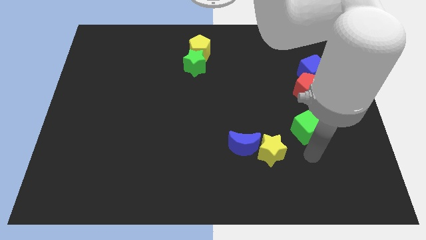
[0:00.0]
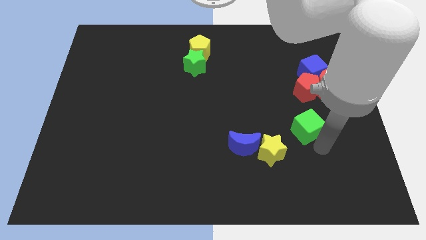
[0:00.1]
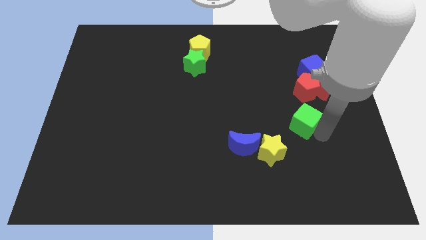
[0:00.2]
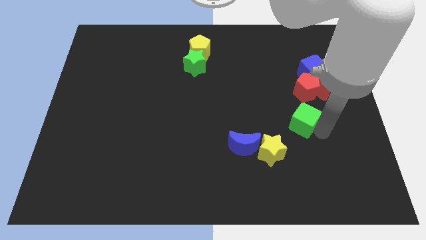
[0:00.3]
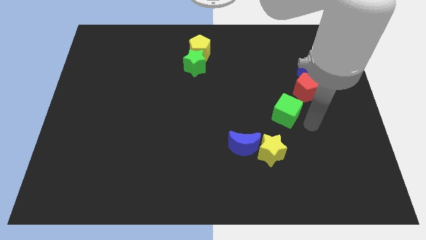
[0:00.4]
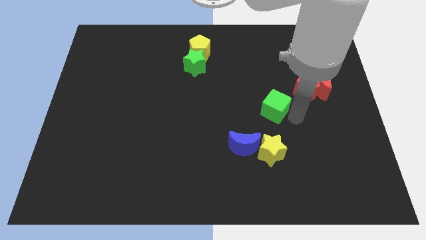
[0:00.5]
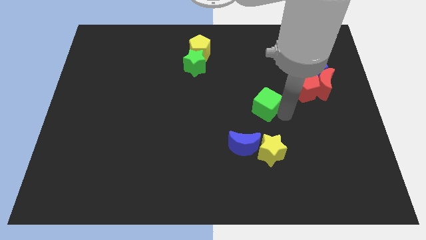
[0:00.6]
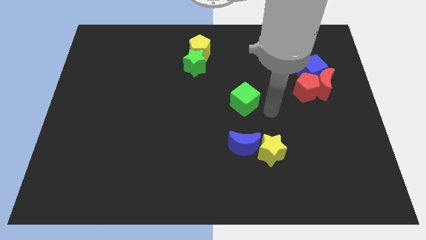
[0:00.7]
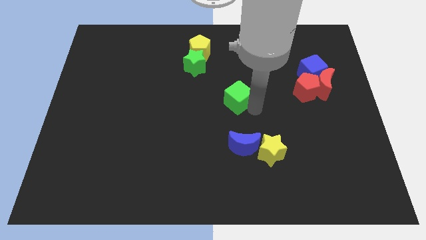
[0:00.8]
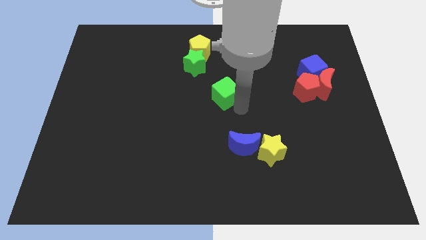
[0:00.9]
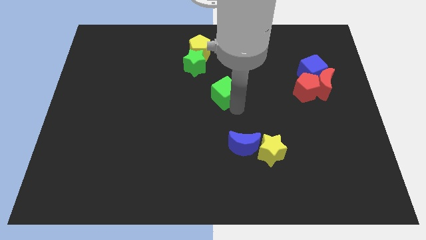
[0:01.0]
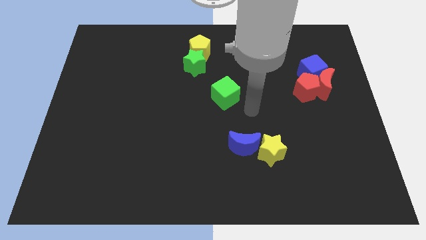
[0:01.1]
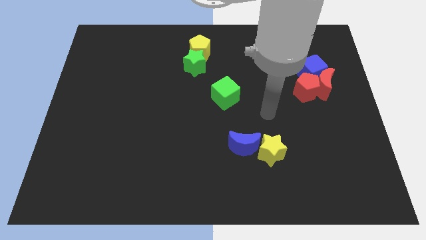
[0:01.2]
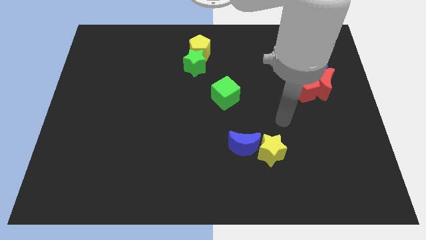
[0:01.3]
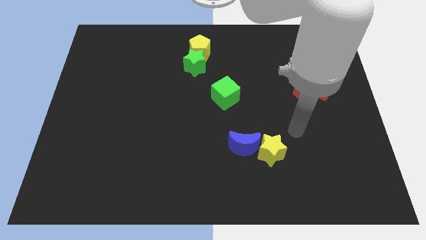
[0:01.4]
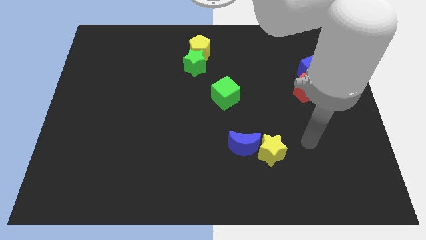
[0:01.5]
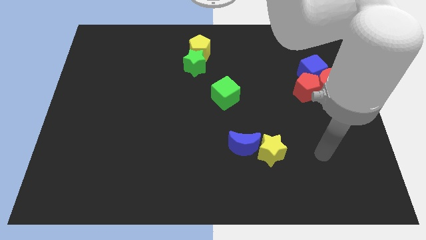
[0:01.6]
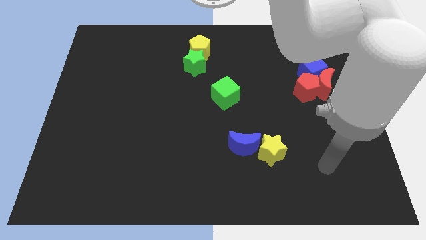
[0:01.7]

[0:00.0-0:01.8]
place the green cube left to the red pentagon

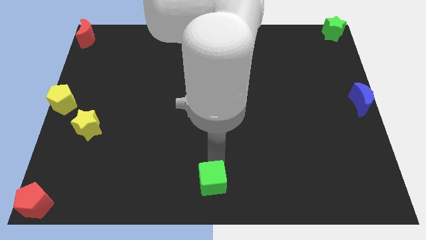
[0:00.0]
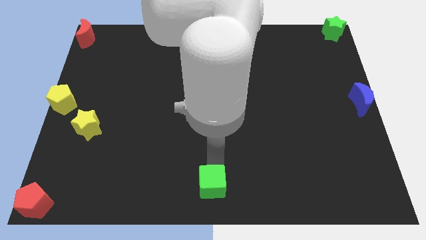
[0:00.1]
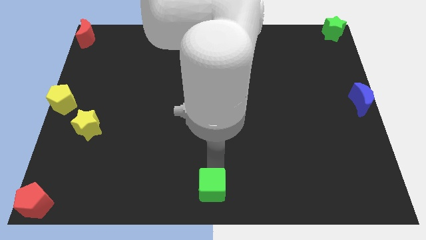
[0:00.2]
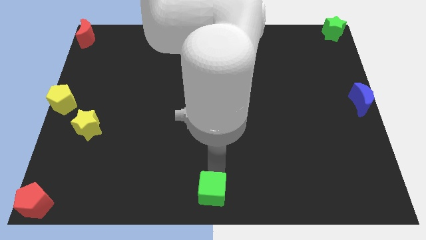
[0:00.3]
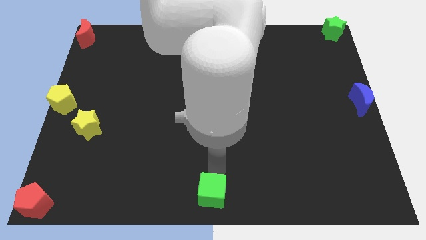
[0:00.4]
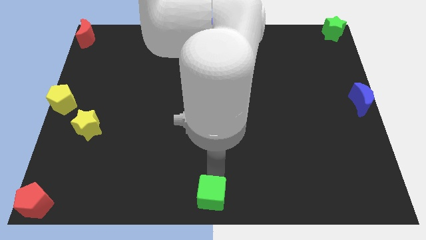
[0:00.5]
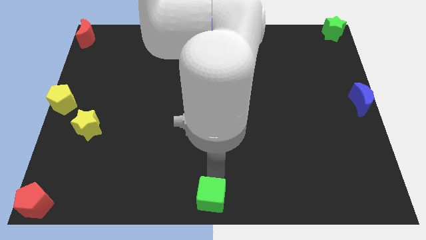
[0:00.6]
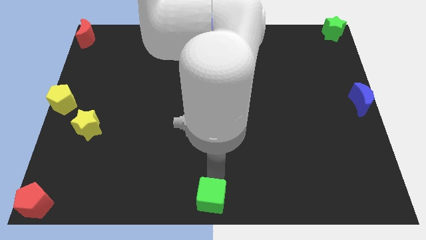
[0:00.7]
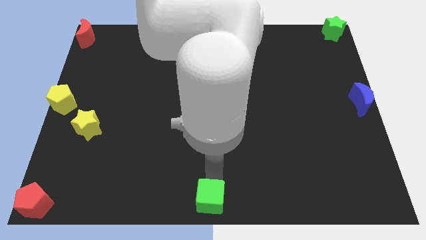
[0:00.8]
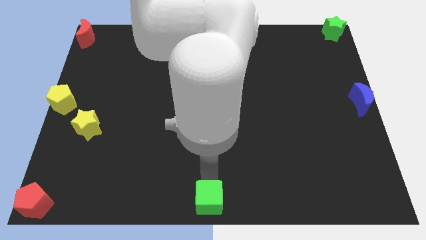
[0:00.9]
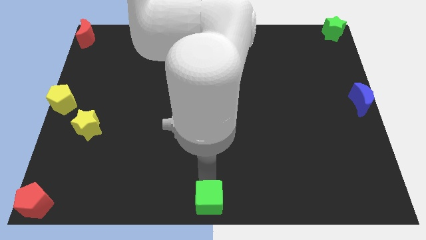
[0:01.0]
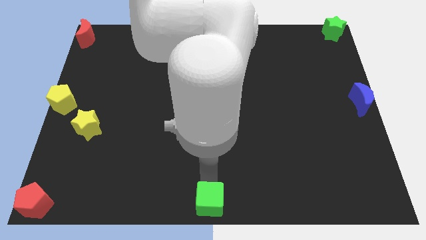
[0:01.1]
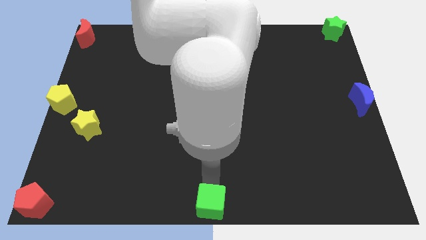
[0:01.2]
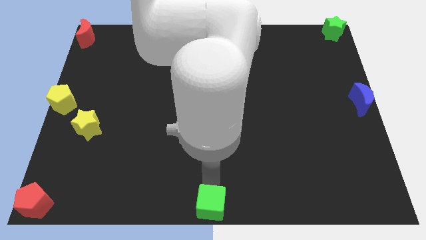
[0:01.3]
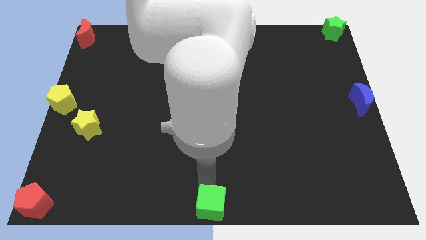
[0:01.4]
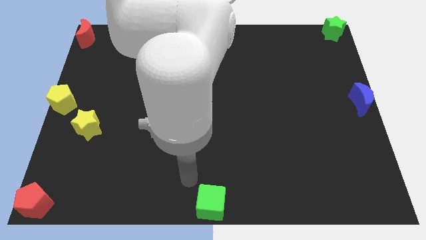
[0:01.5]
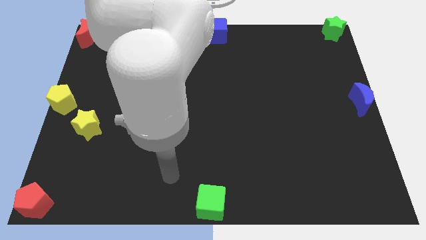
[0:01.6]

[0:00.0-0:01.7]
push the green cube to the bottom center

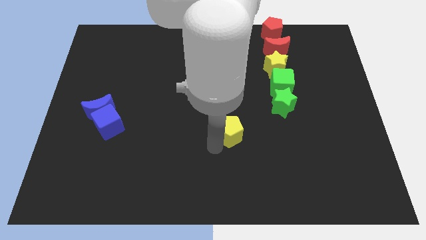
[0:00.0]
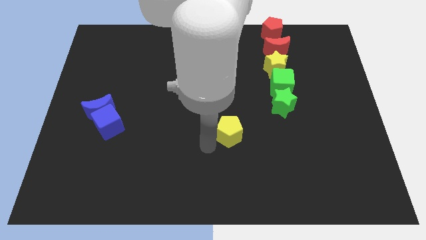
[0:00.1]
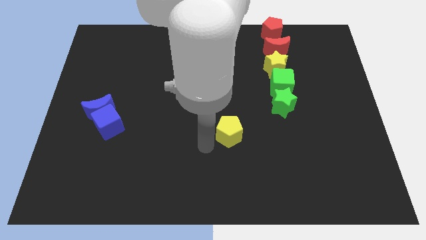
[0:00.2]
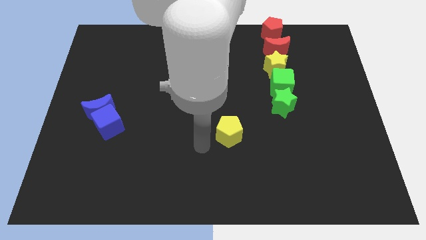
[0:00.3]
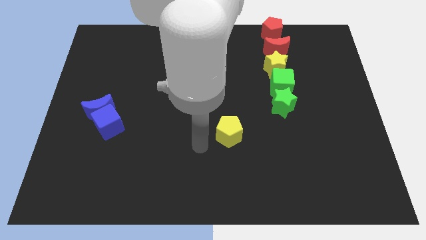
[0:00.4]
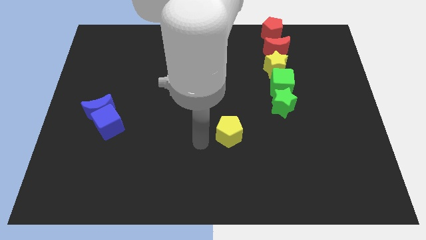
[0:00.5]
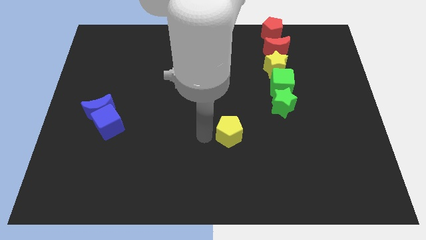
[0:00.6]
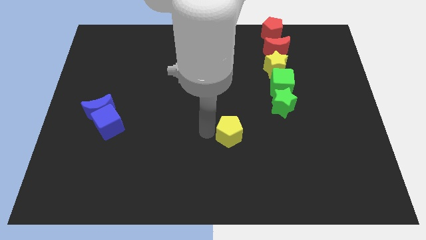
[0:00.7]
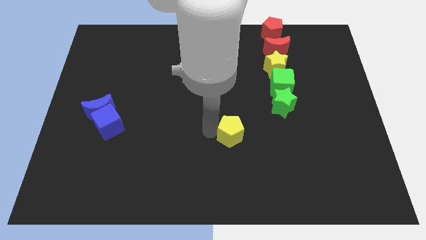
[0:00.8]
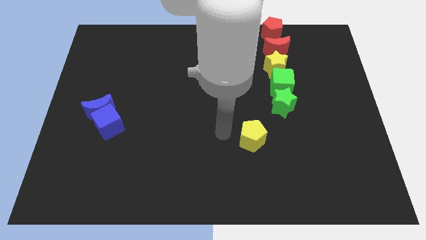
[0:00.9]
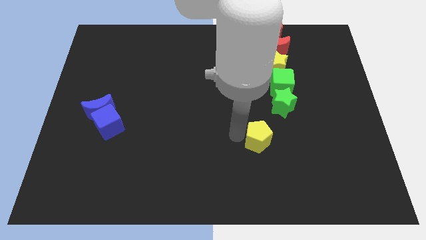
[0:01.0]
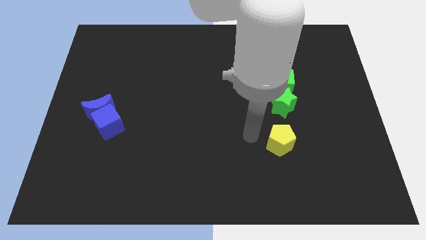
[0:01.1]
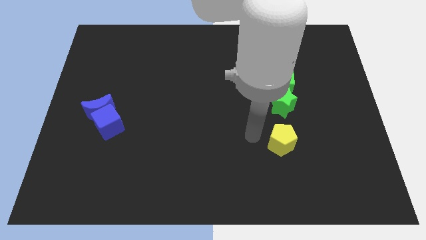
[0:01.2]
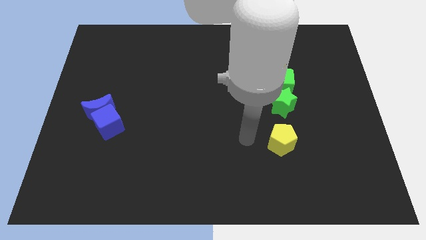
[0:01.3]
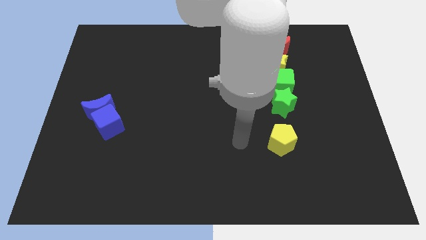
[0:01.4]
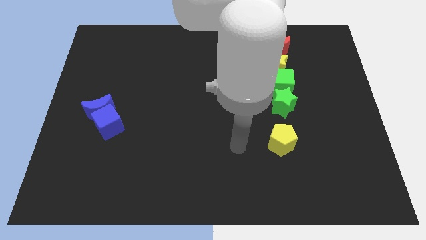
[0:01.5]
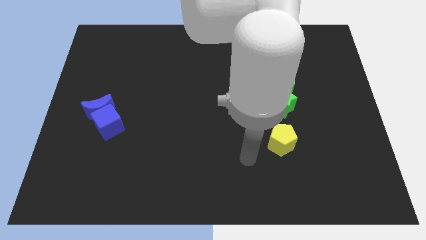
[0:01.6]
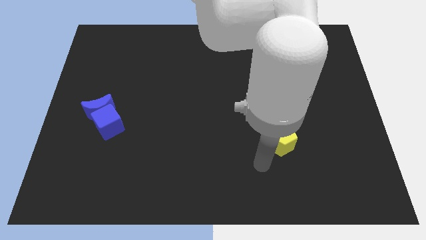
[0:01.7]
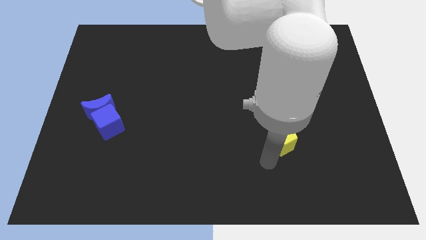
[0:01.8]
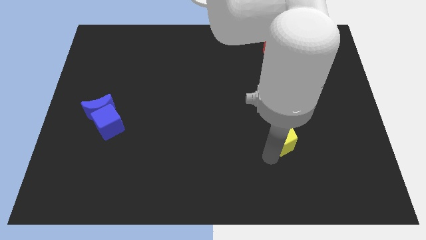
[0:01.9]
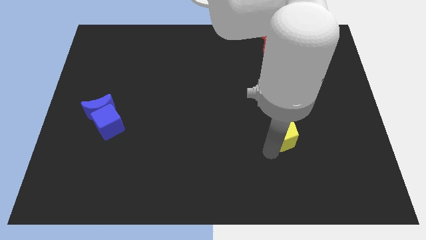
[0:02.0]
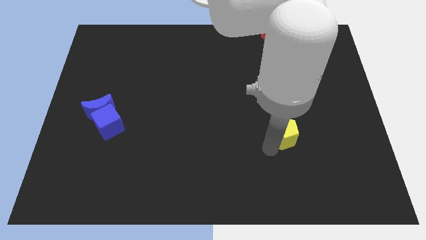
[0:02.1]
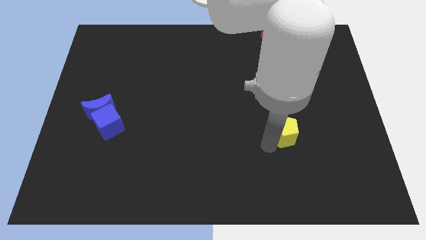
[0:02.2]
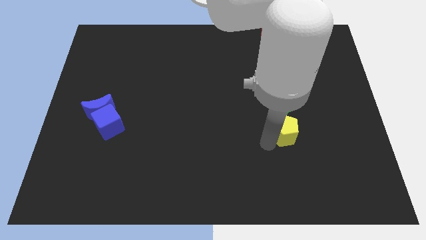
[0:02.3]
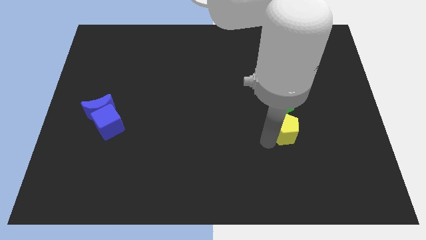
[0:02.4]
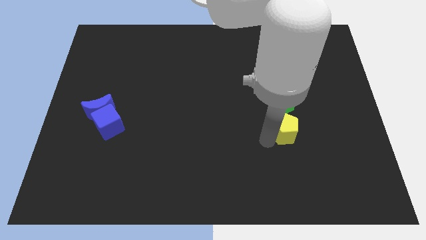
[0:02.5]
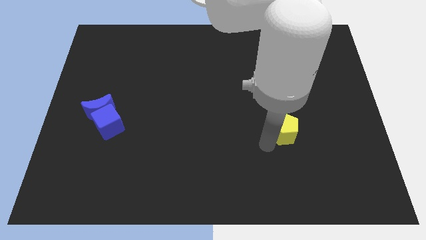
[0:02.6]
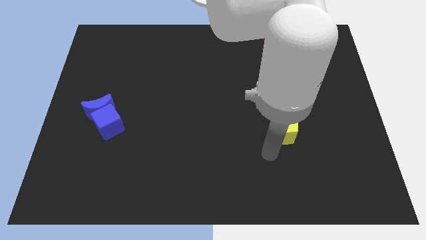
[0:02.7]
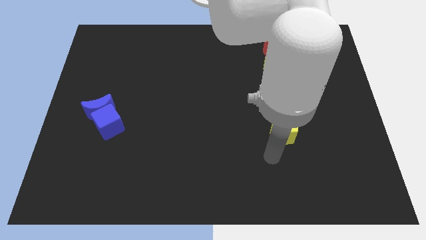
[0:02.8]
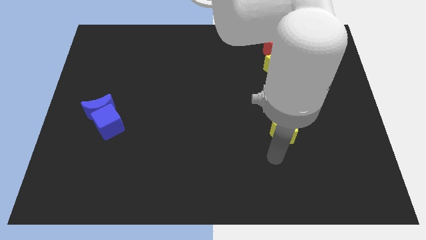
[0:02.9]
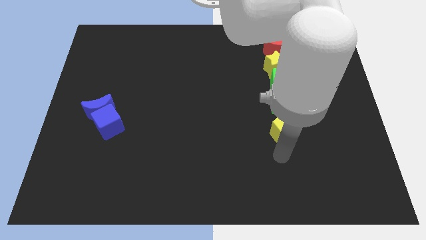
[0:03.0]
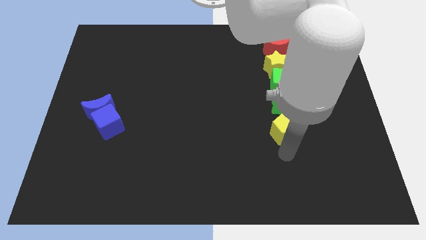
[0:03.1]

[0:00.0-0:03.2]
place yellow pentagon below green star

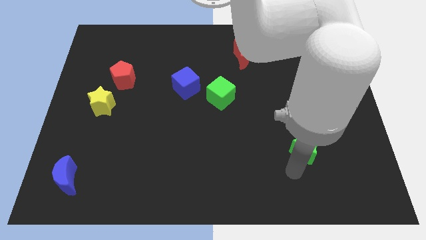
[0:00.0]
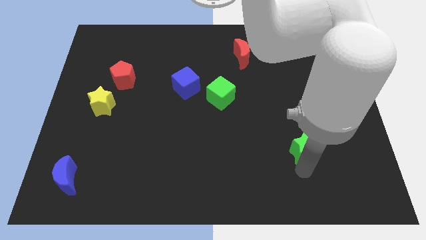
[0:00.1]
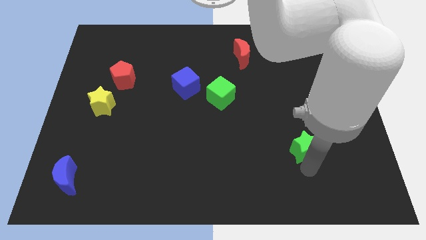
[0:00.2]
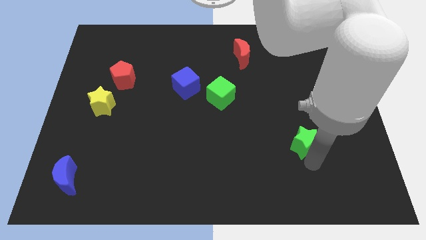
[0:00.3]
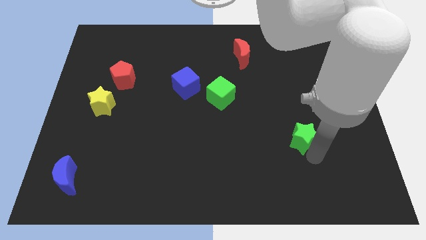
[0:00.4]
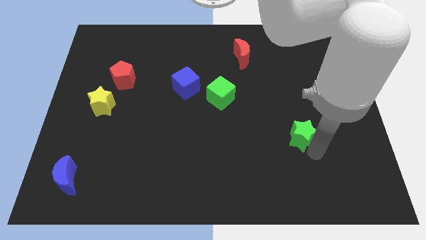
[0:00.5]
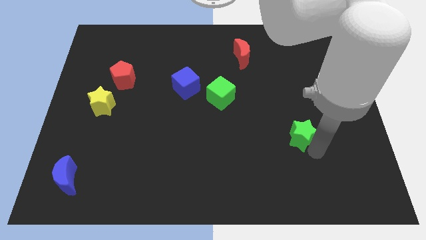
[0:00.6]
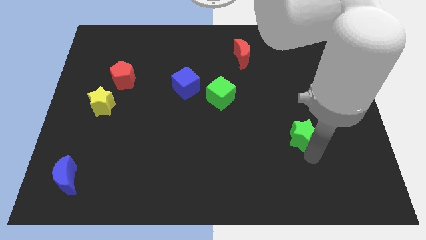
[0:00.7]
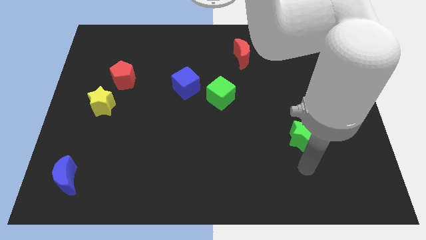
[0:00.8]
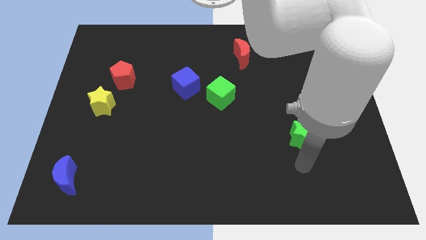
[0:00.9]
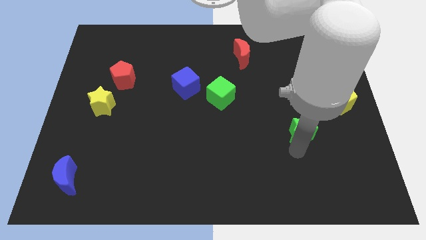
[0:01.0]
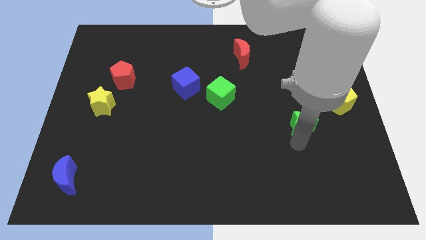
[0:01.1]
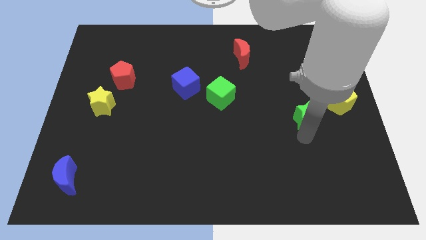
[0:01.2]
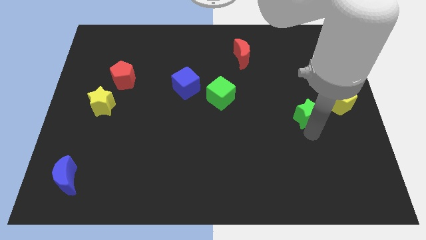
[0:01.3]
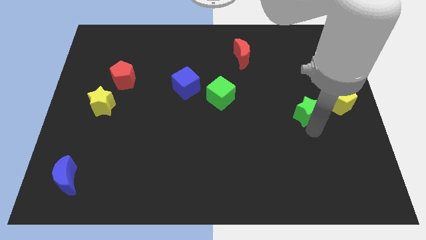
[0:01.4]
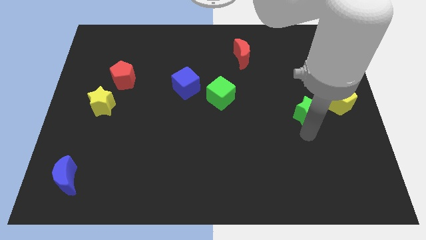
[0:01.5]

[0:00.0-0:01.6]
push the green star towards up

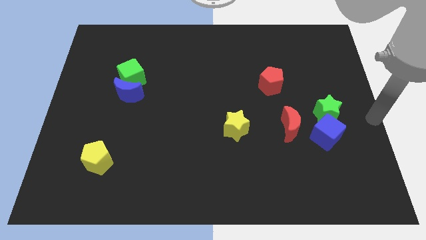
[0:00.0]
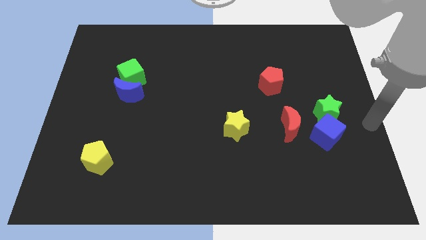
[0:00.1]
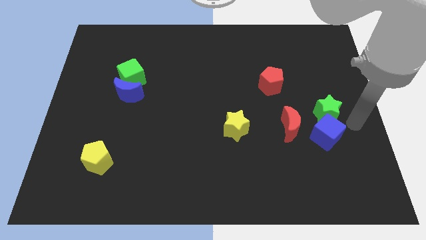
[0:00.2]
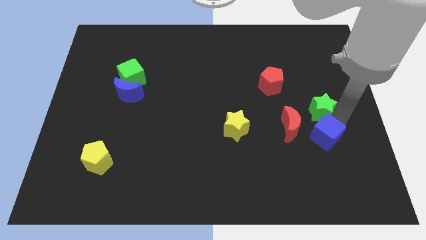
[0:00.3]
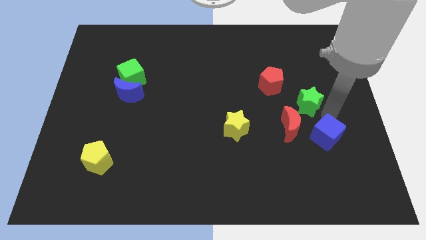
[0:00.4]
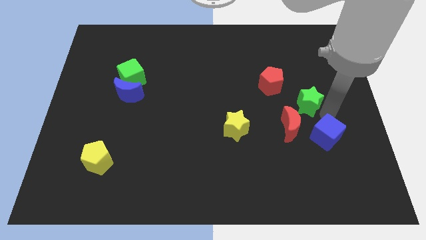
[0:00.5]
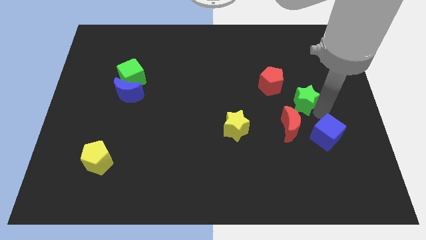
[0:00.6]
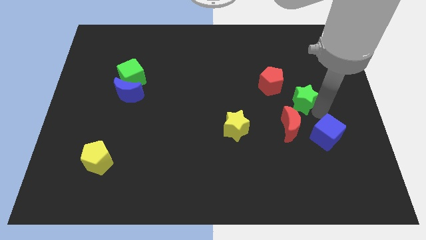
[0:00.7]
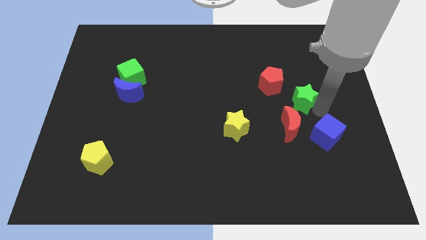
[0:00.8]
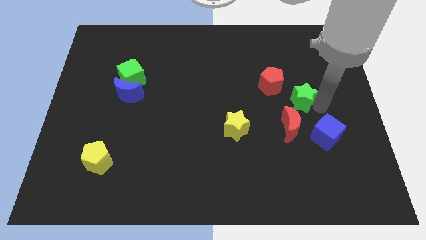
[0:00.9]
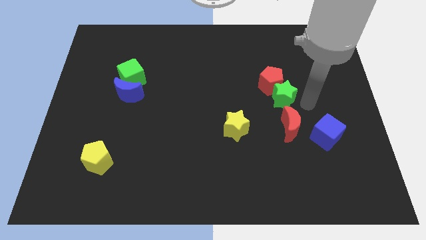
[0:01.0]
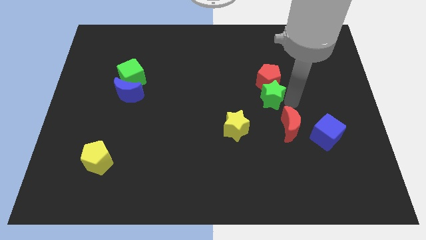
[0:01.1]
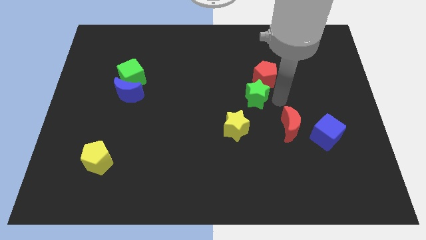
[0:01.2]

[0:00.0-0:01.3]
drag the green star into the red pentagon
